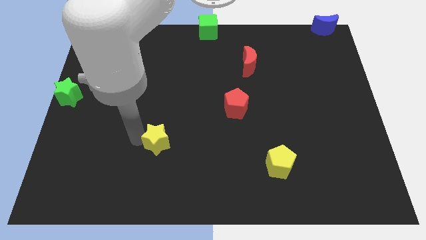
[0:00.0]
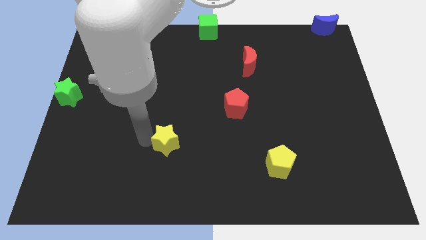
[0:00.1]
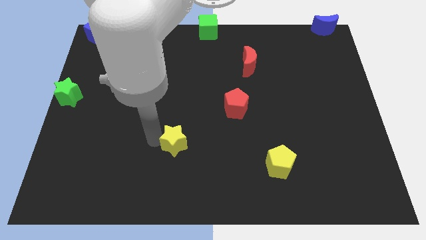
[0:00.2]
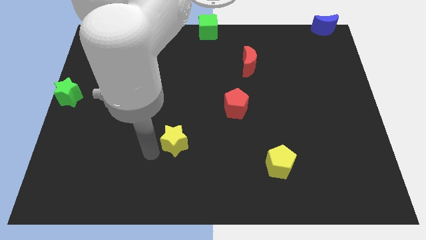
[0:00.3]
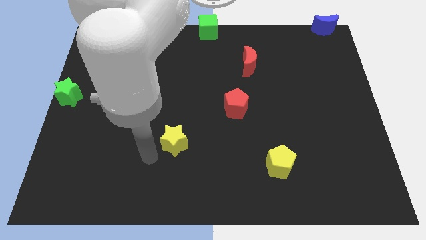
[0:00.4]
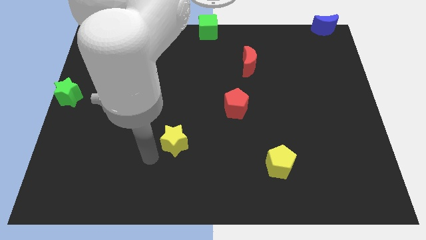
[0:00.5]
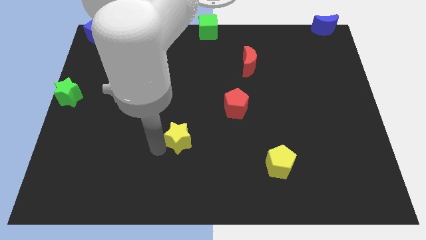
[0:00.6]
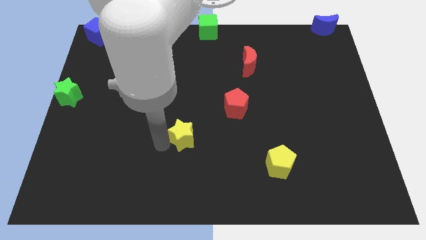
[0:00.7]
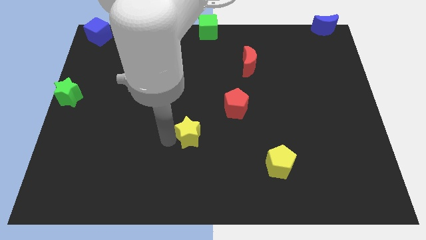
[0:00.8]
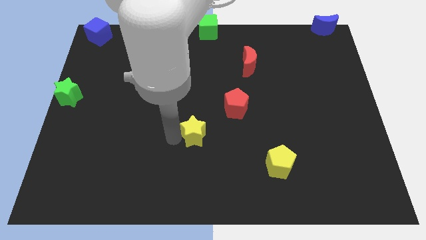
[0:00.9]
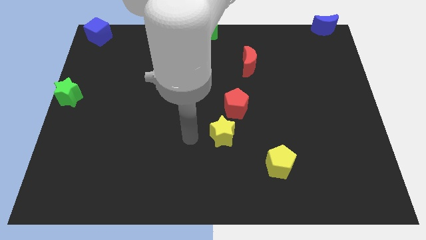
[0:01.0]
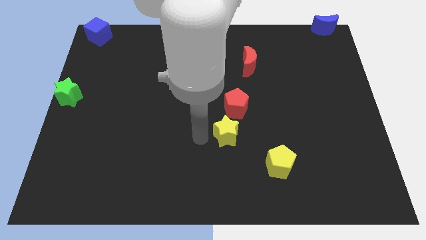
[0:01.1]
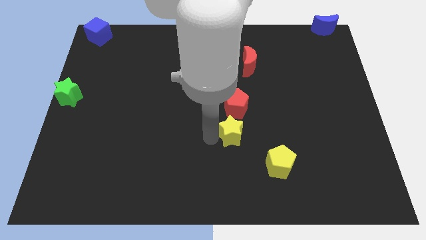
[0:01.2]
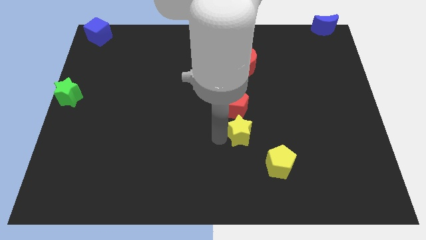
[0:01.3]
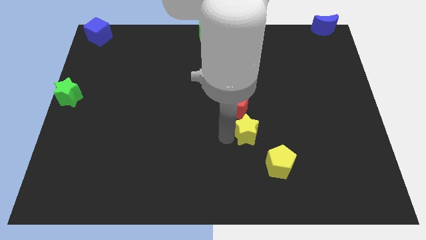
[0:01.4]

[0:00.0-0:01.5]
place the yellow star below the red pentagon

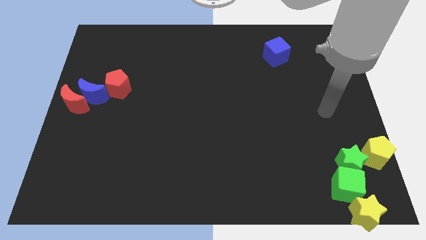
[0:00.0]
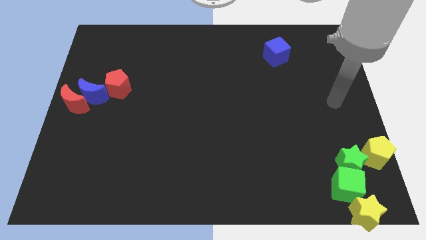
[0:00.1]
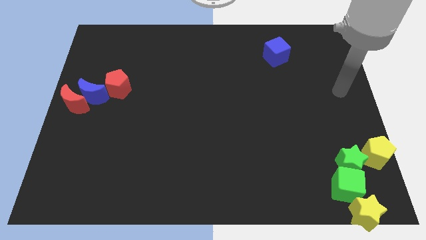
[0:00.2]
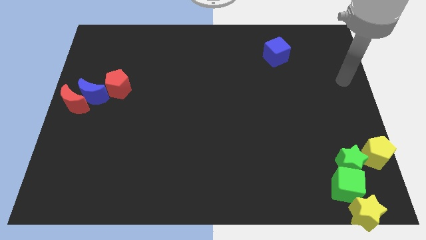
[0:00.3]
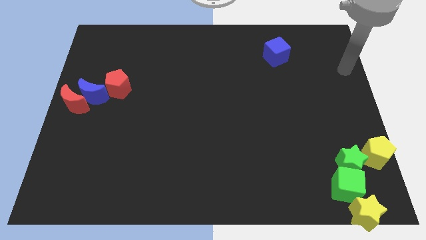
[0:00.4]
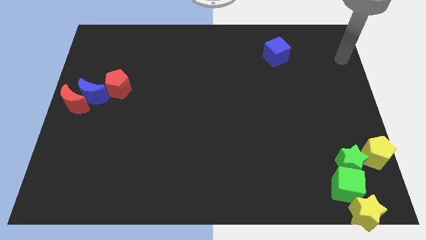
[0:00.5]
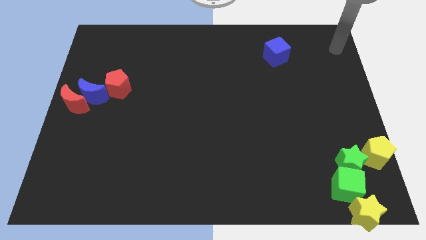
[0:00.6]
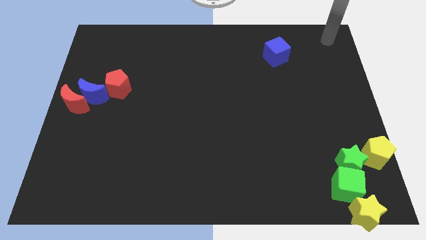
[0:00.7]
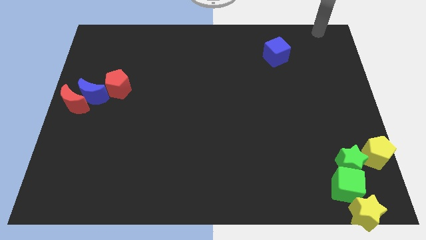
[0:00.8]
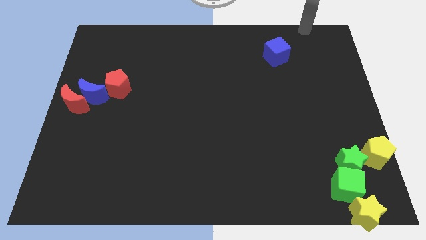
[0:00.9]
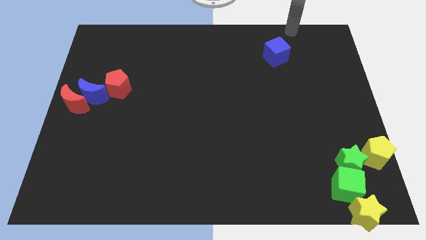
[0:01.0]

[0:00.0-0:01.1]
move your arm towards top side of the board

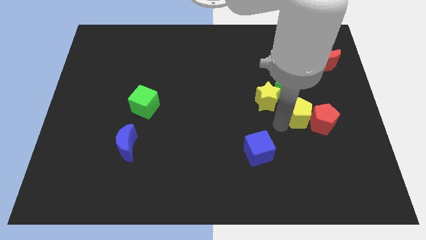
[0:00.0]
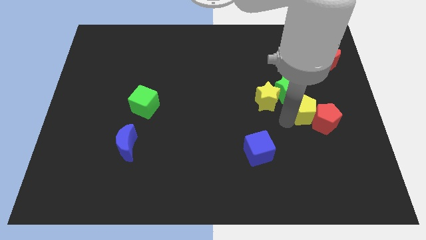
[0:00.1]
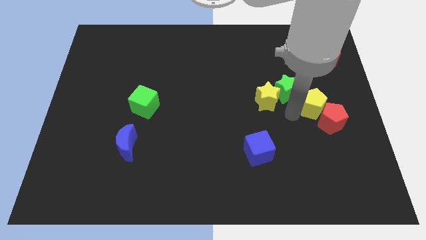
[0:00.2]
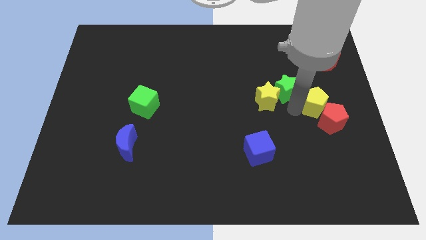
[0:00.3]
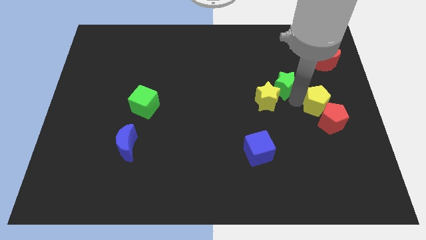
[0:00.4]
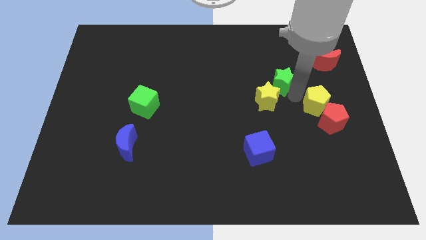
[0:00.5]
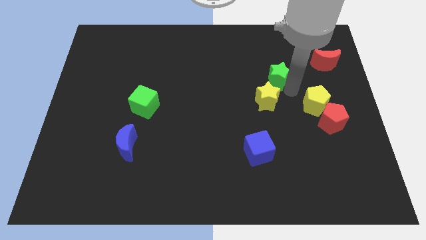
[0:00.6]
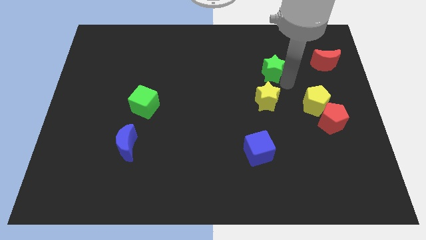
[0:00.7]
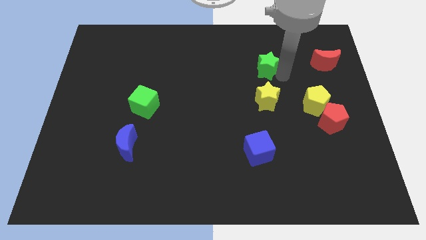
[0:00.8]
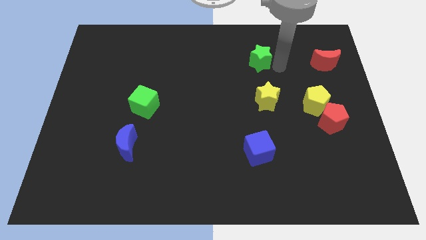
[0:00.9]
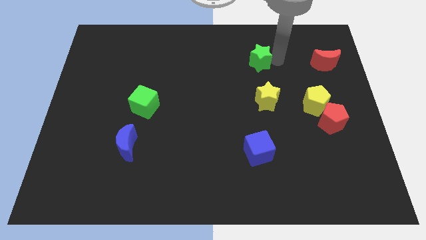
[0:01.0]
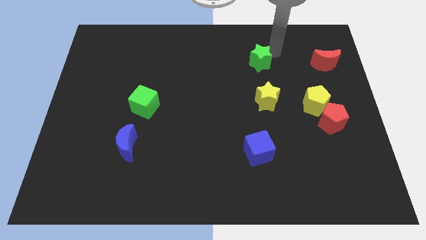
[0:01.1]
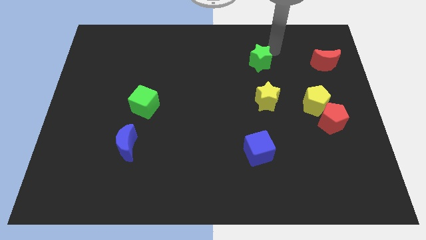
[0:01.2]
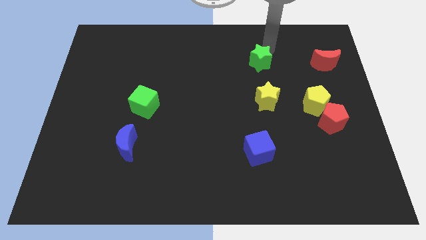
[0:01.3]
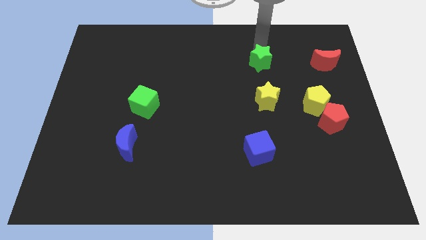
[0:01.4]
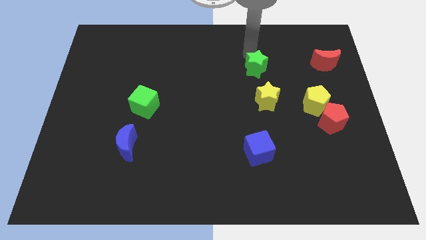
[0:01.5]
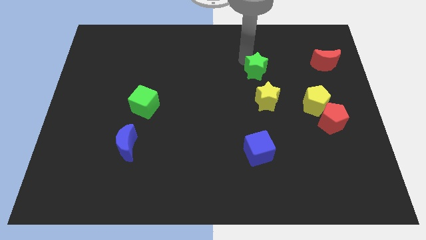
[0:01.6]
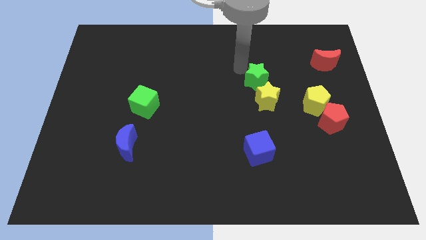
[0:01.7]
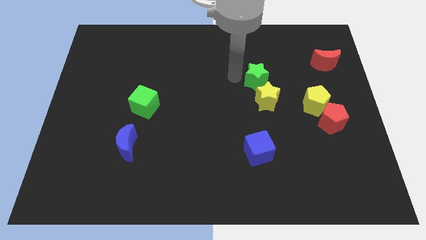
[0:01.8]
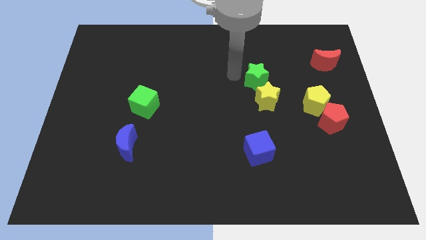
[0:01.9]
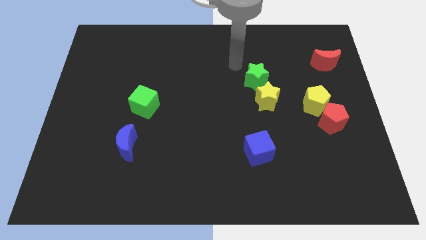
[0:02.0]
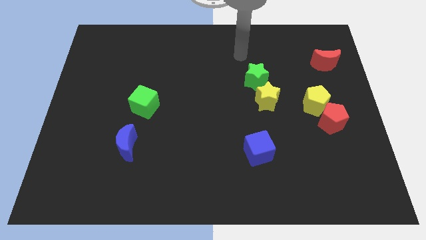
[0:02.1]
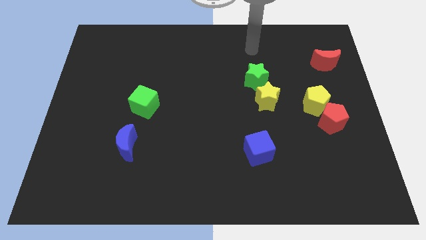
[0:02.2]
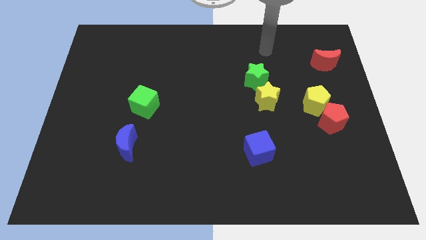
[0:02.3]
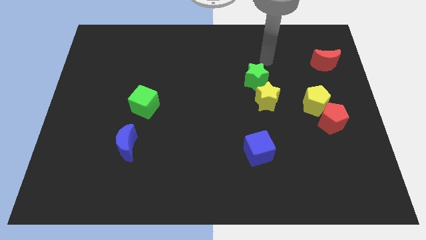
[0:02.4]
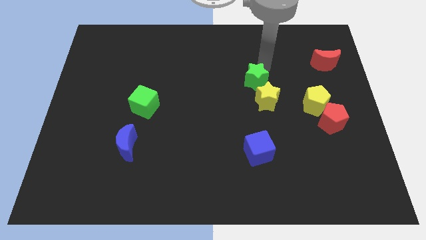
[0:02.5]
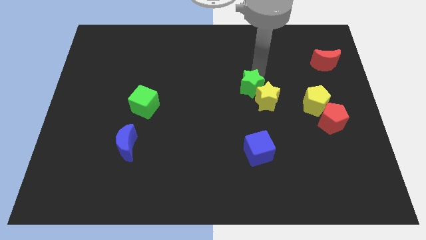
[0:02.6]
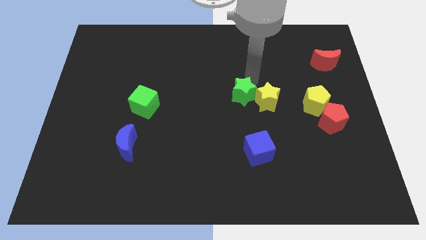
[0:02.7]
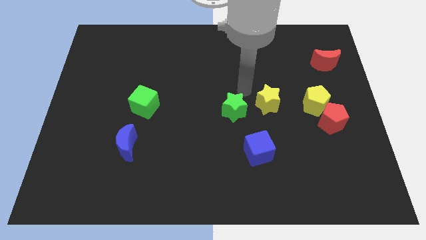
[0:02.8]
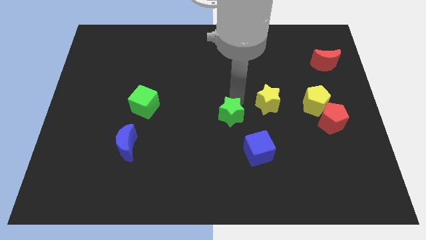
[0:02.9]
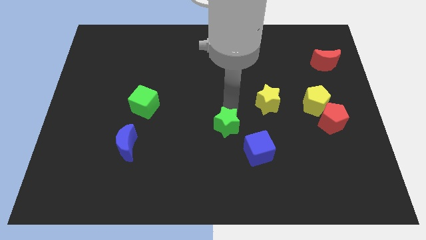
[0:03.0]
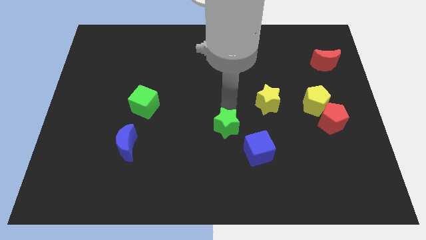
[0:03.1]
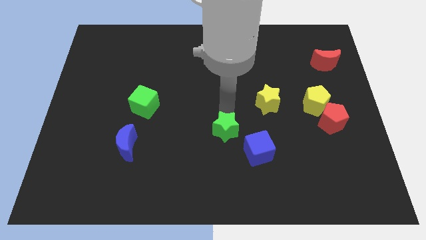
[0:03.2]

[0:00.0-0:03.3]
move the green star away from the yellow star

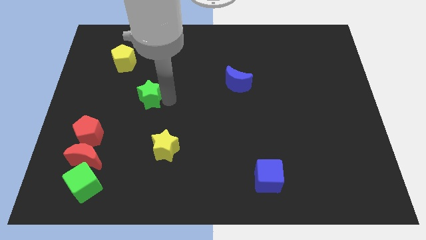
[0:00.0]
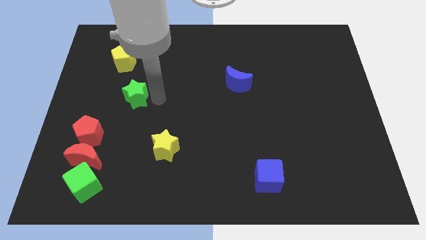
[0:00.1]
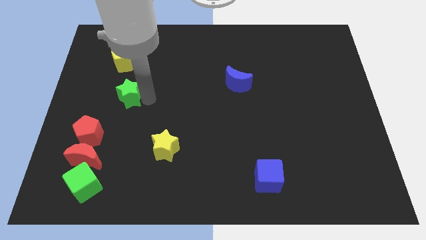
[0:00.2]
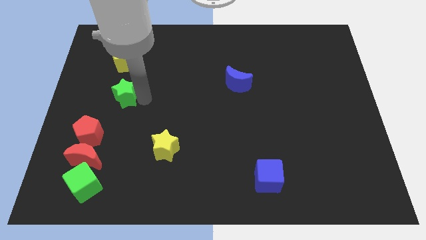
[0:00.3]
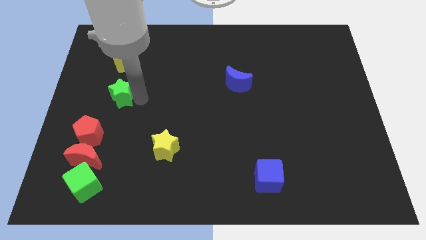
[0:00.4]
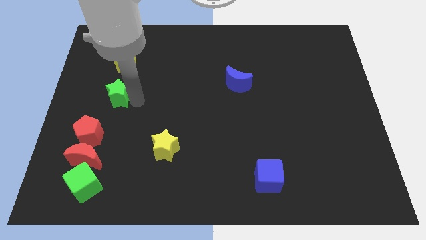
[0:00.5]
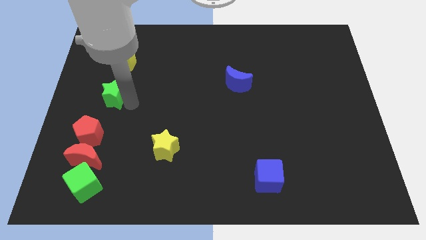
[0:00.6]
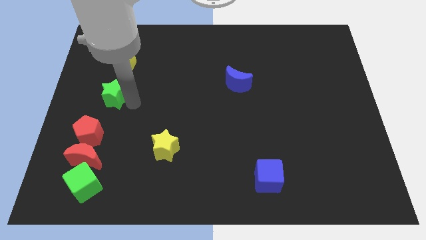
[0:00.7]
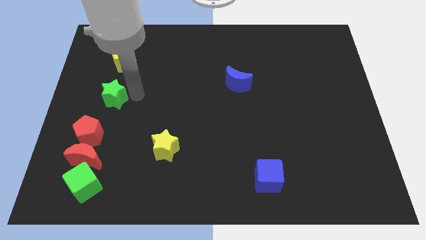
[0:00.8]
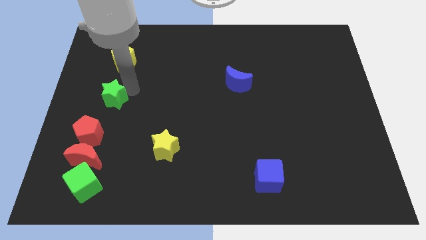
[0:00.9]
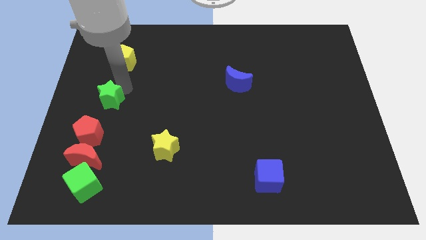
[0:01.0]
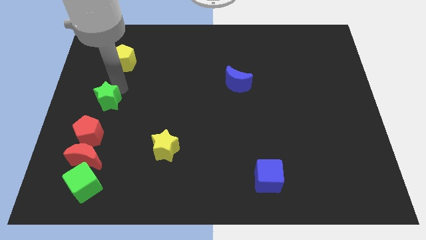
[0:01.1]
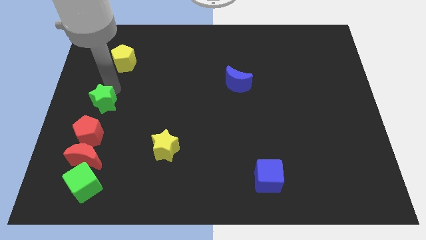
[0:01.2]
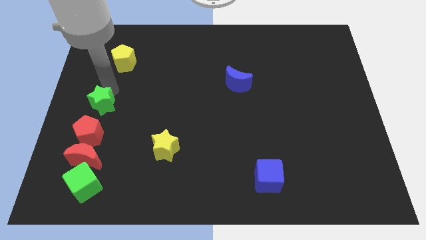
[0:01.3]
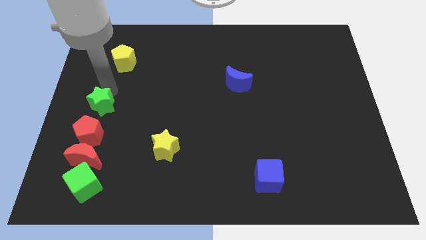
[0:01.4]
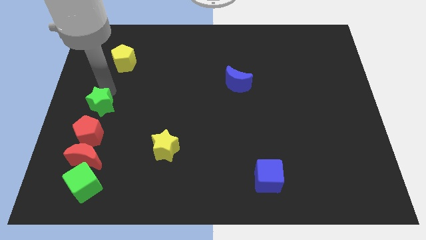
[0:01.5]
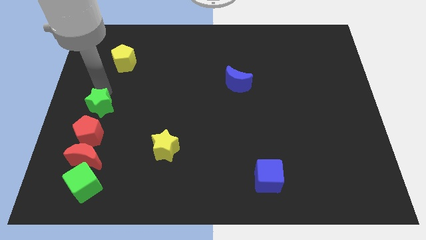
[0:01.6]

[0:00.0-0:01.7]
place the green star above the red pentagon

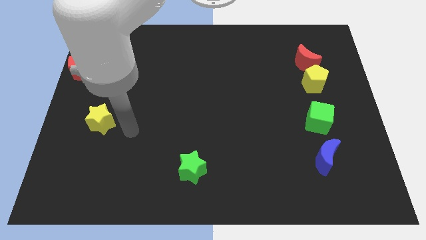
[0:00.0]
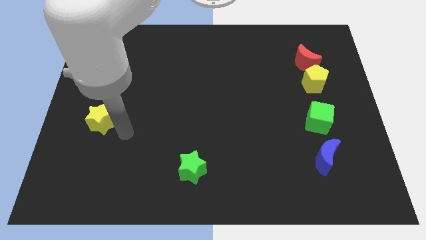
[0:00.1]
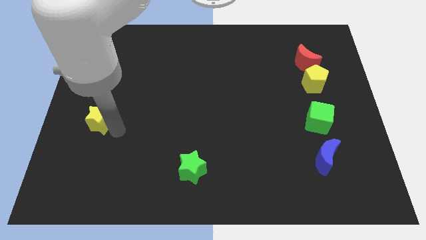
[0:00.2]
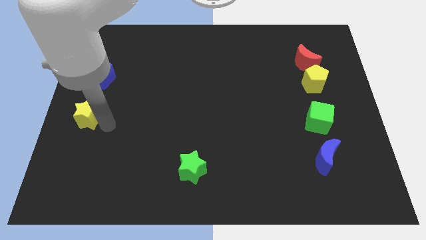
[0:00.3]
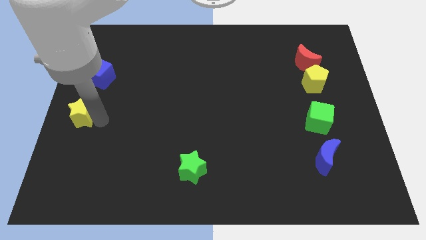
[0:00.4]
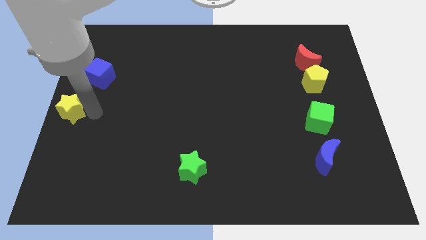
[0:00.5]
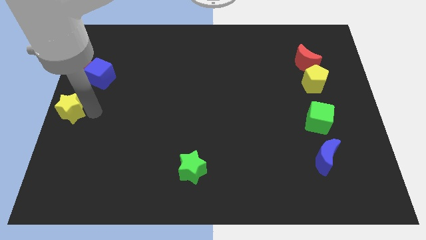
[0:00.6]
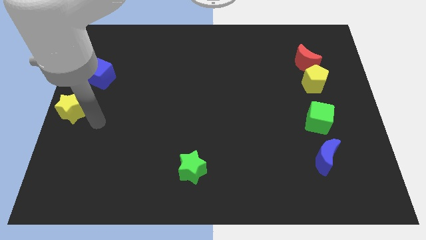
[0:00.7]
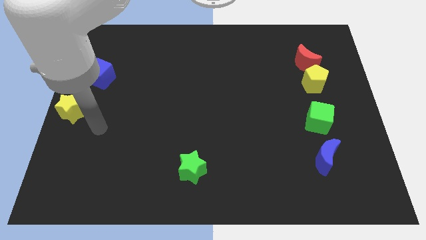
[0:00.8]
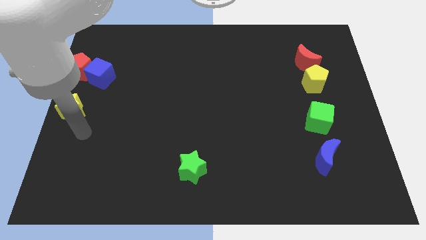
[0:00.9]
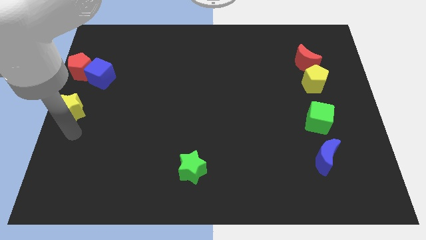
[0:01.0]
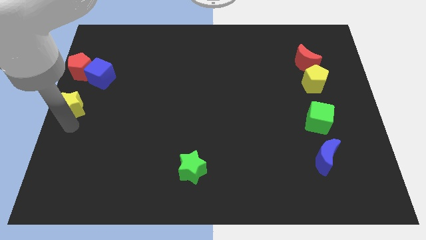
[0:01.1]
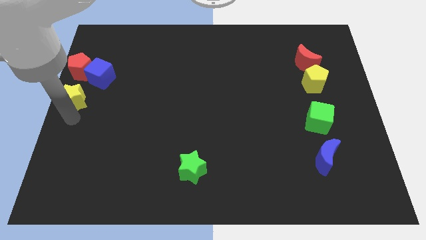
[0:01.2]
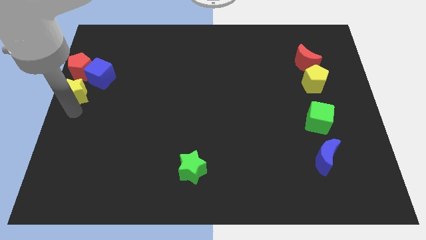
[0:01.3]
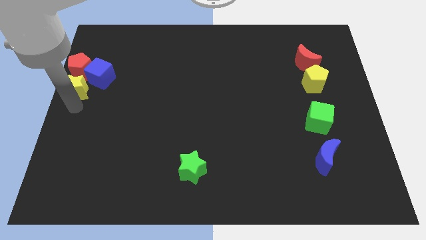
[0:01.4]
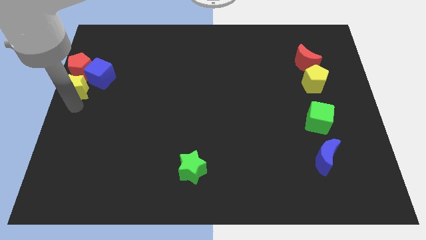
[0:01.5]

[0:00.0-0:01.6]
move the yellow star below the red pentagon
